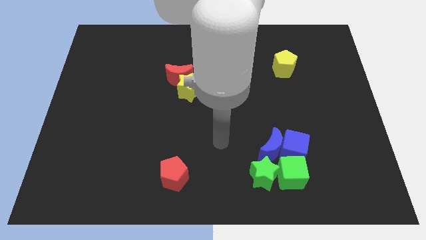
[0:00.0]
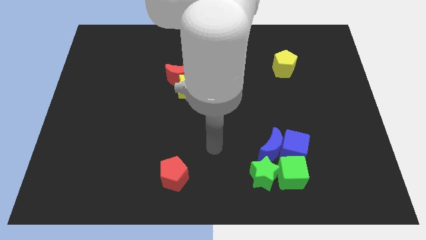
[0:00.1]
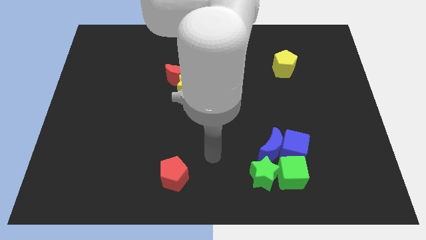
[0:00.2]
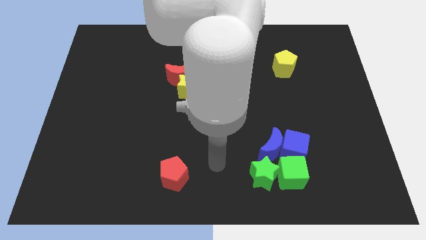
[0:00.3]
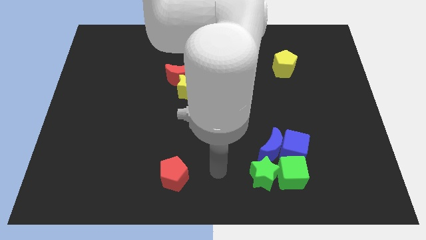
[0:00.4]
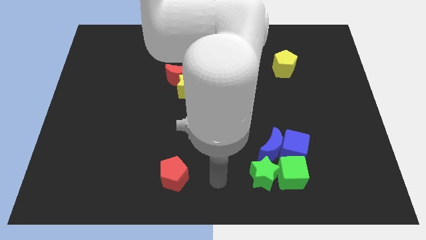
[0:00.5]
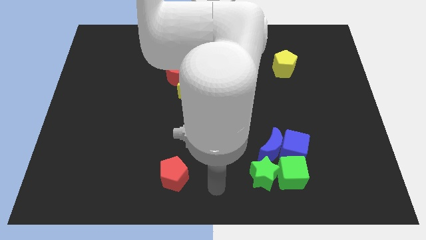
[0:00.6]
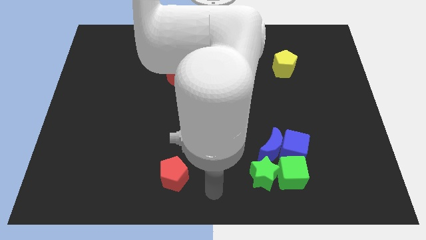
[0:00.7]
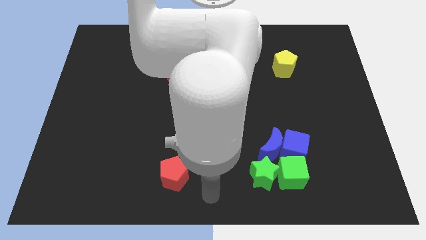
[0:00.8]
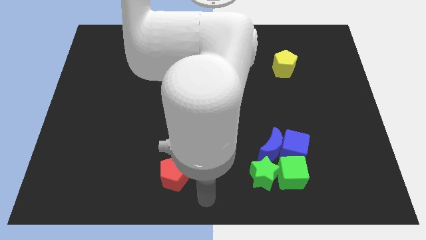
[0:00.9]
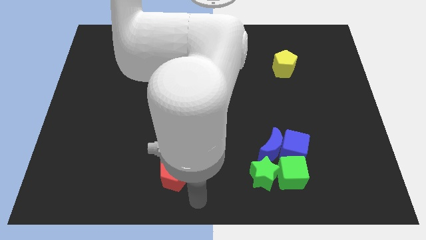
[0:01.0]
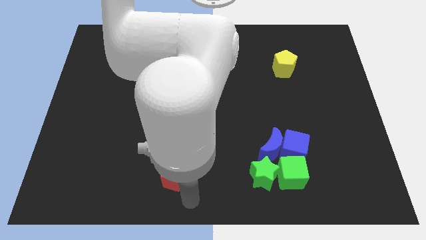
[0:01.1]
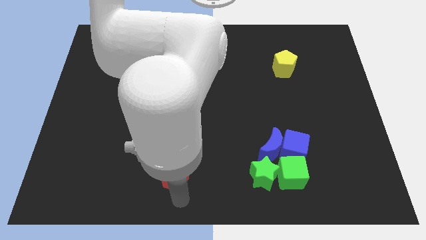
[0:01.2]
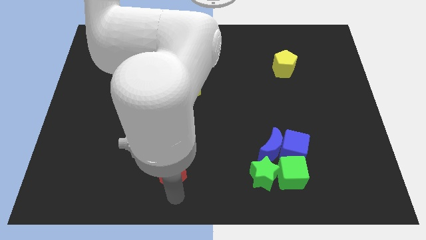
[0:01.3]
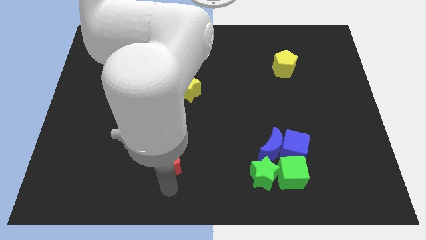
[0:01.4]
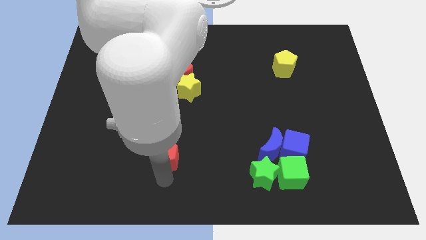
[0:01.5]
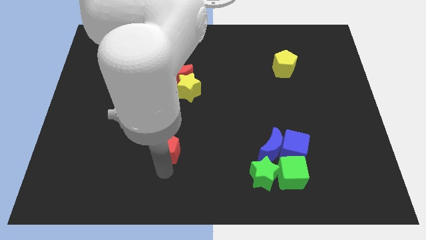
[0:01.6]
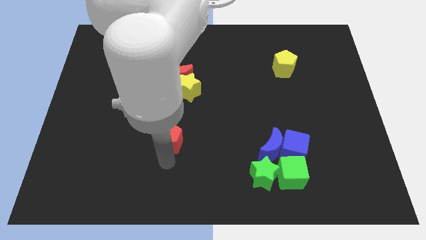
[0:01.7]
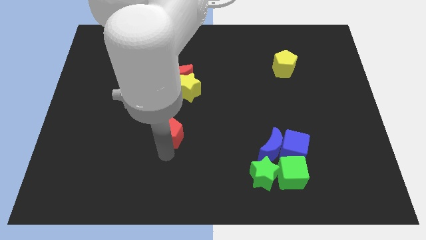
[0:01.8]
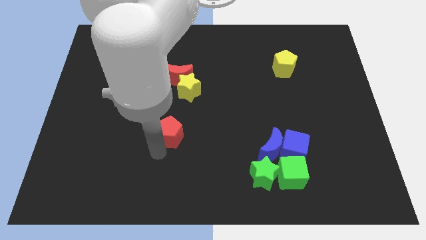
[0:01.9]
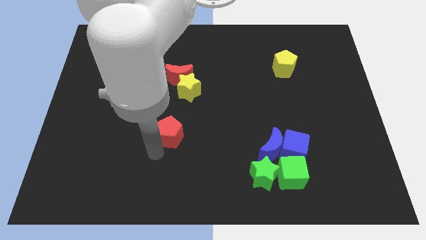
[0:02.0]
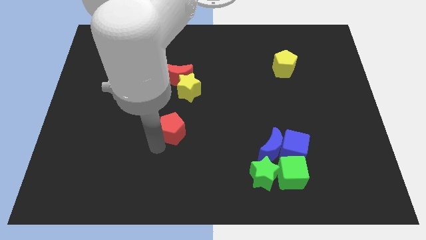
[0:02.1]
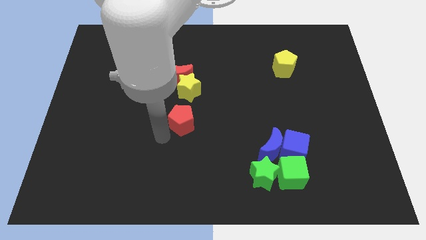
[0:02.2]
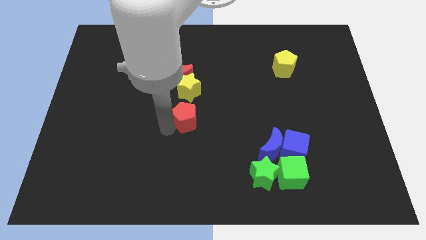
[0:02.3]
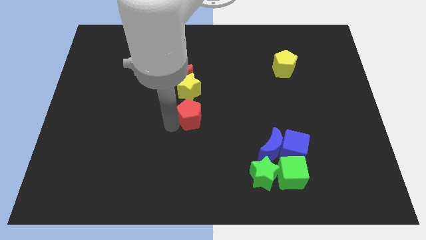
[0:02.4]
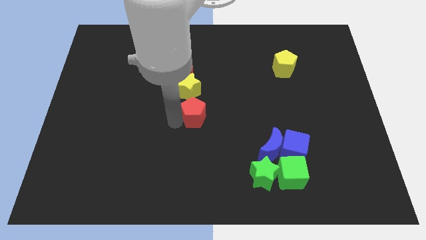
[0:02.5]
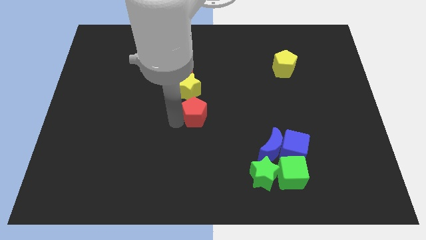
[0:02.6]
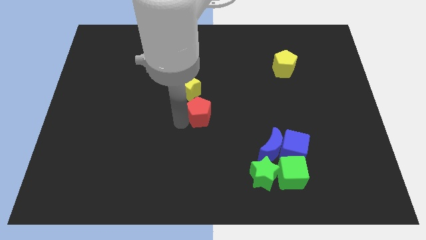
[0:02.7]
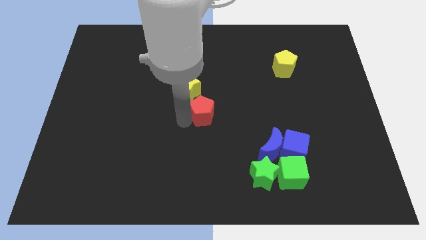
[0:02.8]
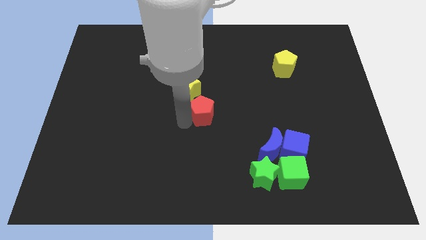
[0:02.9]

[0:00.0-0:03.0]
move the red pentagon to the bottom right of the yellow star

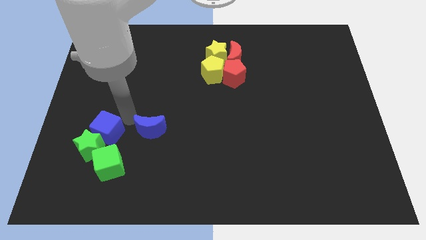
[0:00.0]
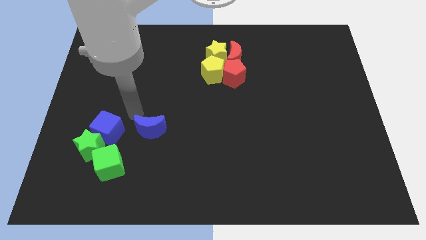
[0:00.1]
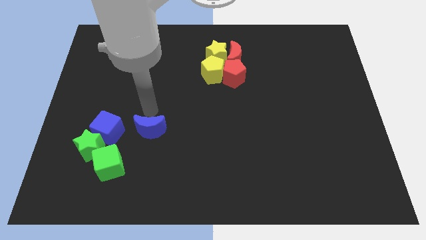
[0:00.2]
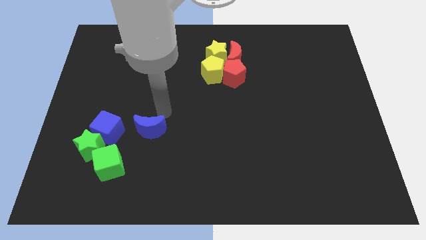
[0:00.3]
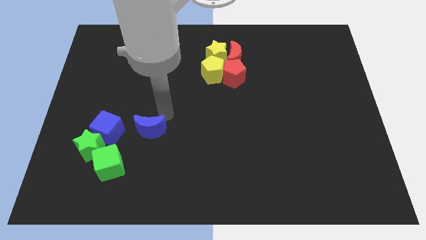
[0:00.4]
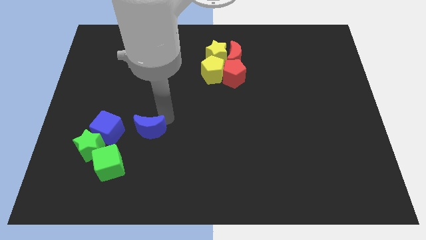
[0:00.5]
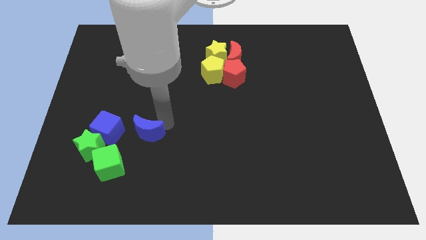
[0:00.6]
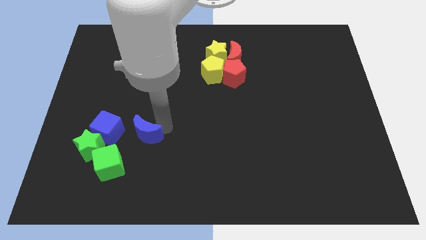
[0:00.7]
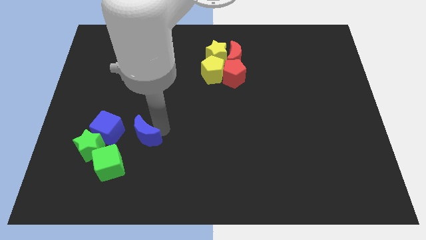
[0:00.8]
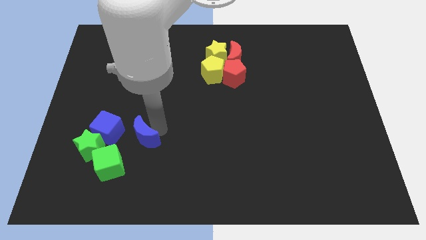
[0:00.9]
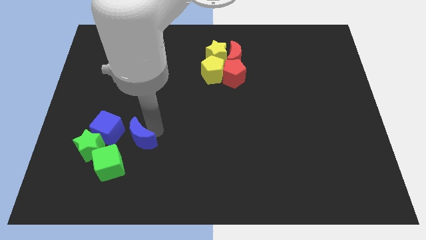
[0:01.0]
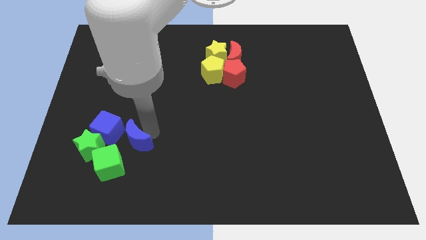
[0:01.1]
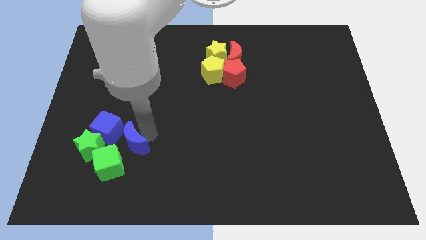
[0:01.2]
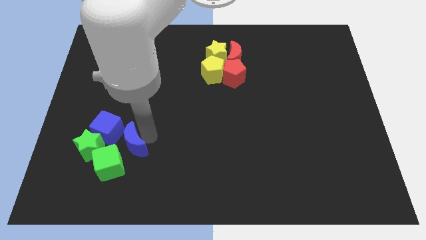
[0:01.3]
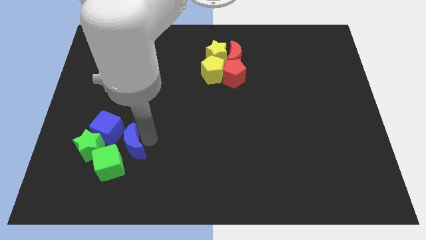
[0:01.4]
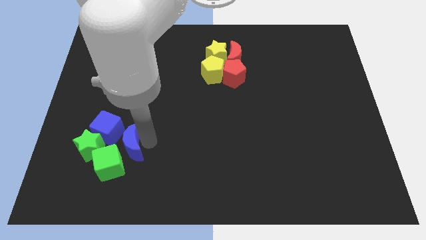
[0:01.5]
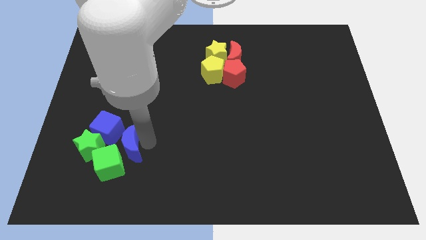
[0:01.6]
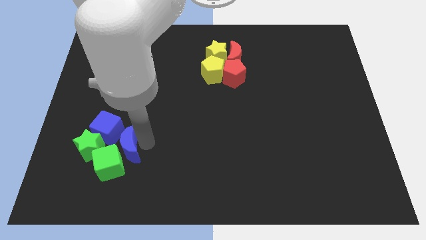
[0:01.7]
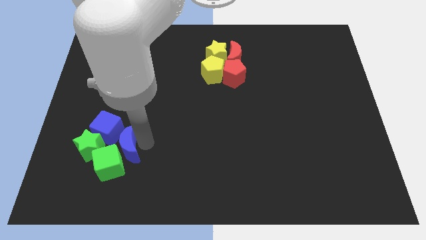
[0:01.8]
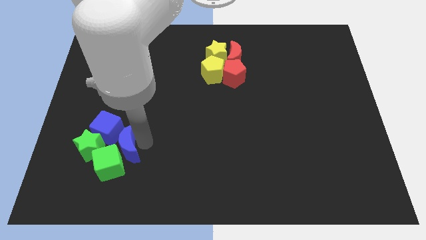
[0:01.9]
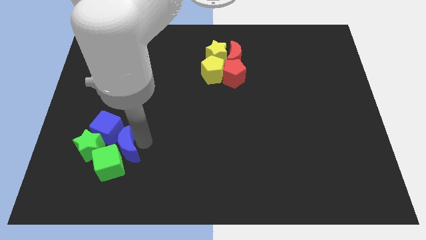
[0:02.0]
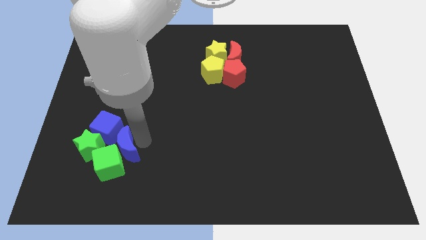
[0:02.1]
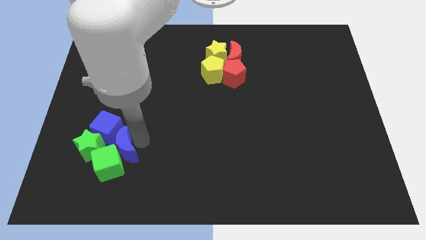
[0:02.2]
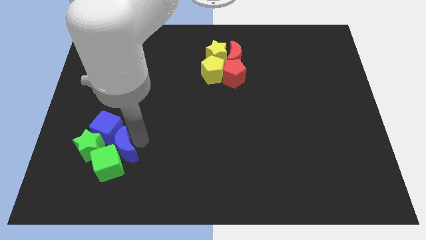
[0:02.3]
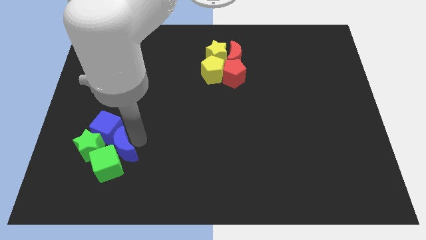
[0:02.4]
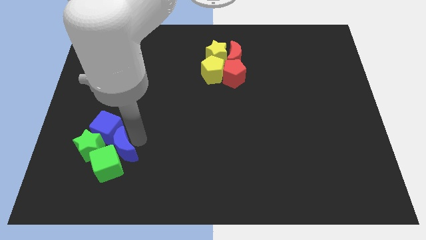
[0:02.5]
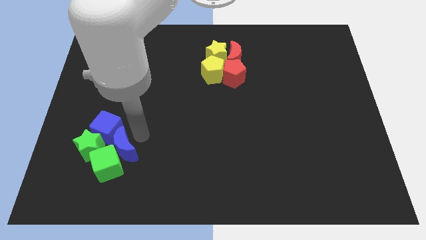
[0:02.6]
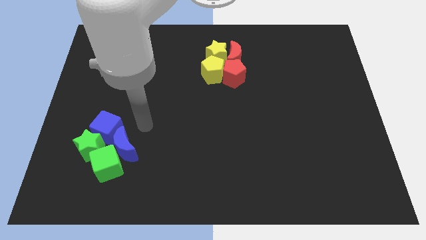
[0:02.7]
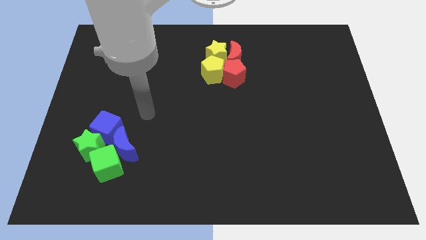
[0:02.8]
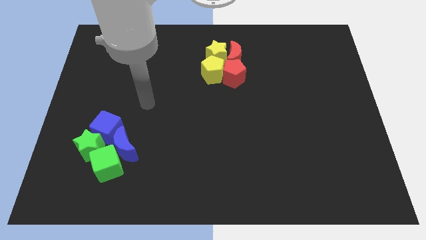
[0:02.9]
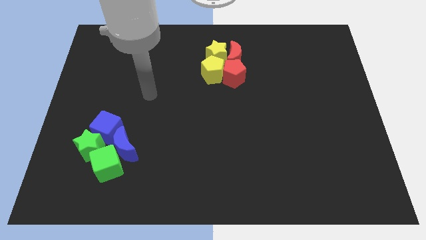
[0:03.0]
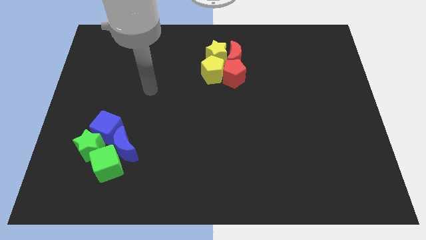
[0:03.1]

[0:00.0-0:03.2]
place your arm on the center left of the board

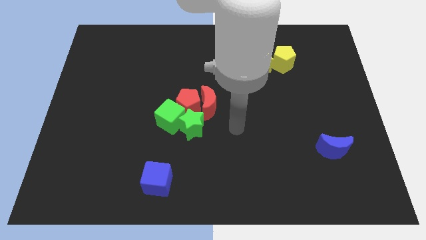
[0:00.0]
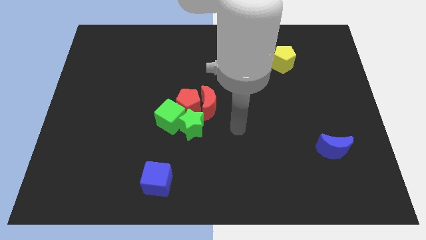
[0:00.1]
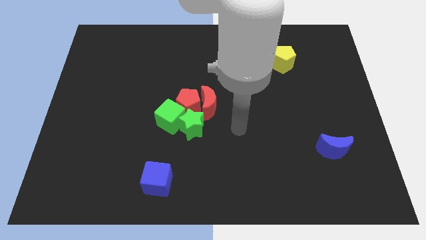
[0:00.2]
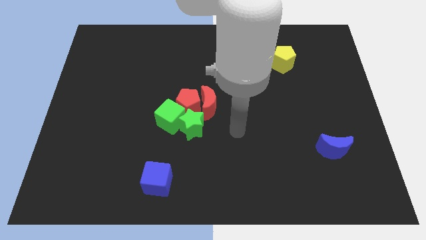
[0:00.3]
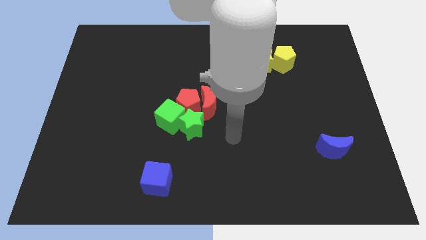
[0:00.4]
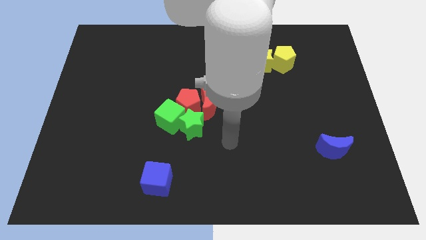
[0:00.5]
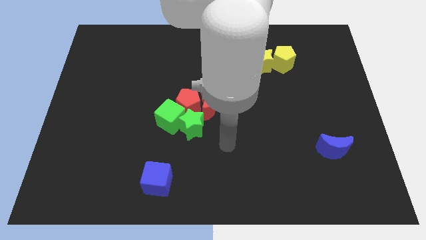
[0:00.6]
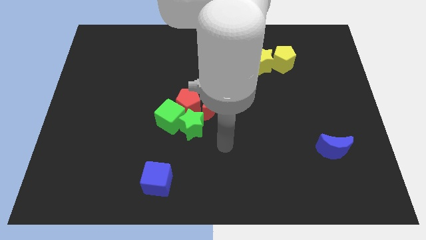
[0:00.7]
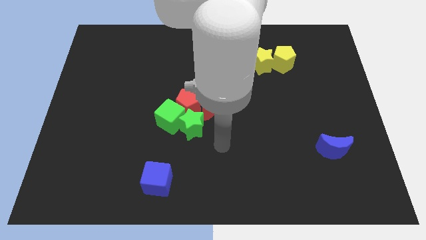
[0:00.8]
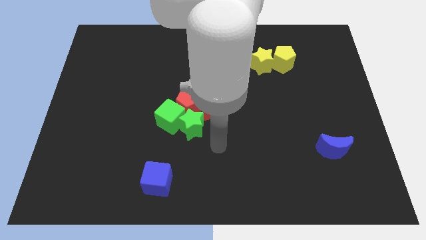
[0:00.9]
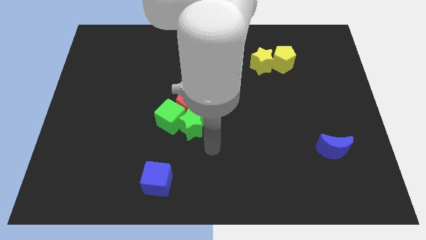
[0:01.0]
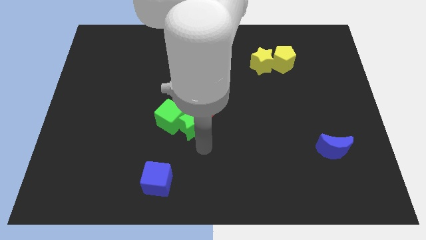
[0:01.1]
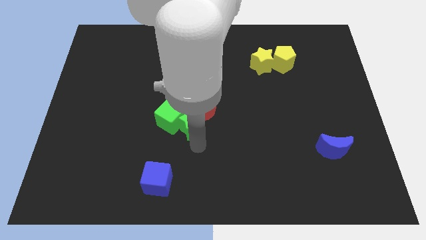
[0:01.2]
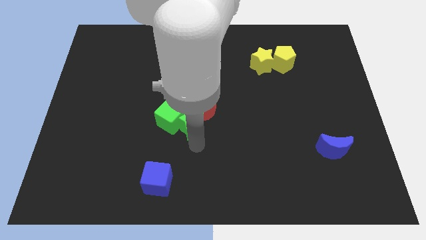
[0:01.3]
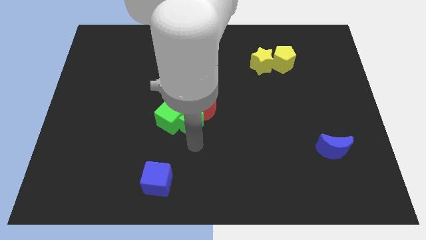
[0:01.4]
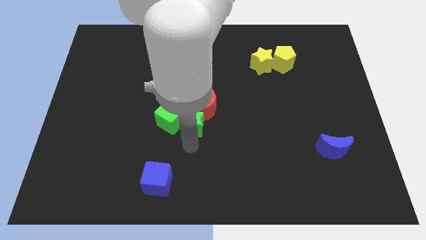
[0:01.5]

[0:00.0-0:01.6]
place your arm at the bottom of the green star

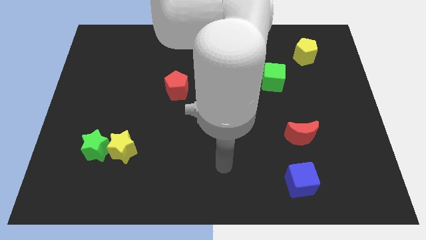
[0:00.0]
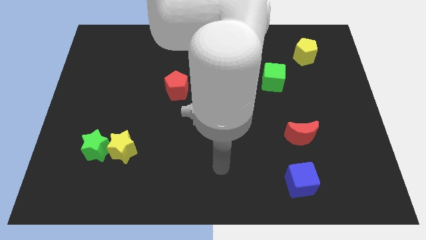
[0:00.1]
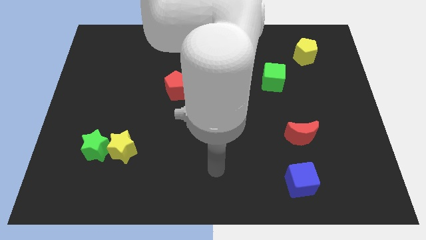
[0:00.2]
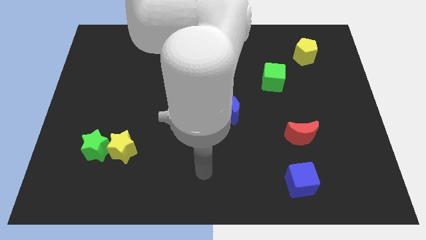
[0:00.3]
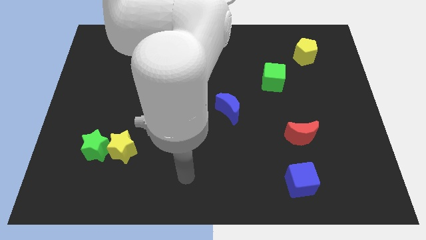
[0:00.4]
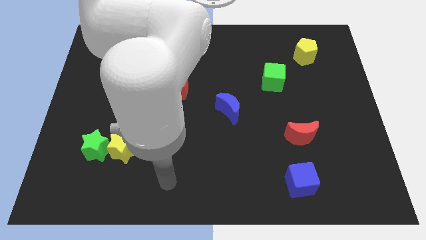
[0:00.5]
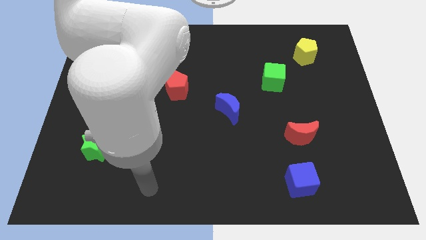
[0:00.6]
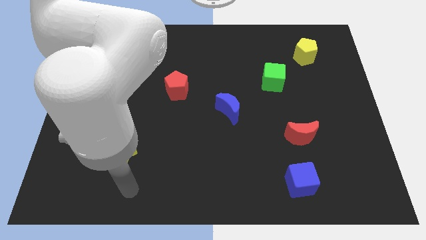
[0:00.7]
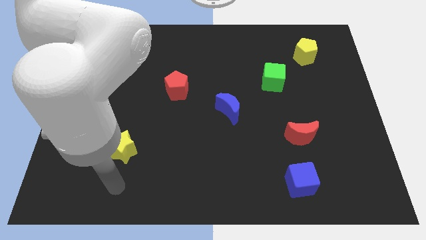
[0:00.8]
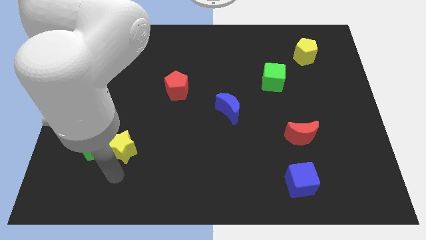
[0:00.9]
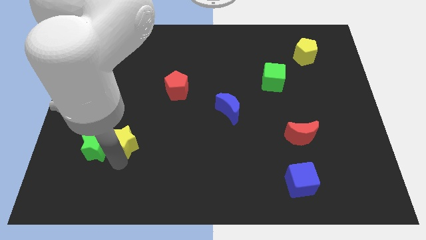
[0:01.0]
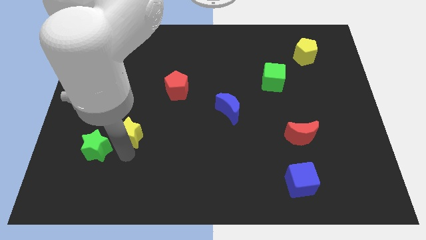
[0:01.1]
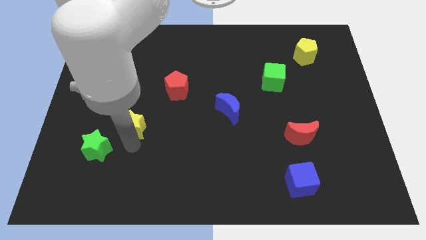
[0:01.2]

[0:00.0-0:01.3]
slightly push the yellow star upwards
